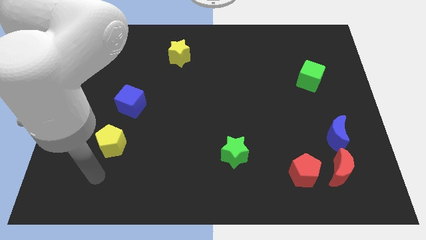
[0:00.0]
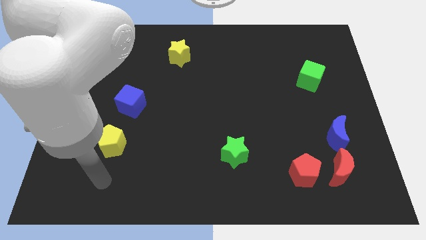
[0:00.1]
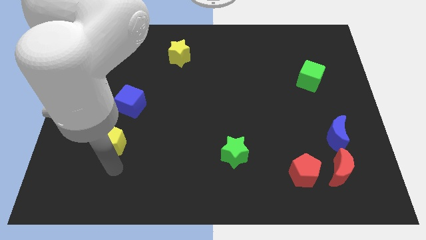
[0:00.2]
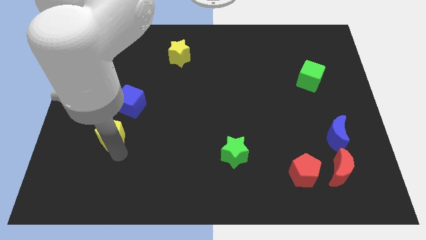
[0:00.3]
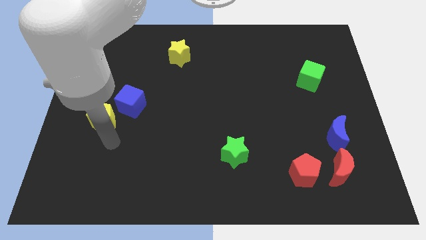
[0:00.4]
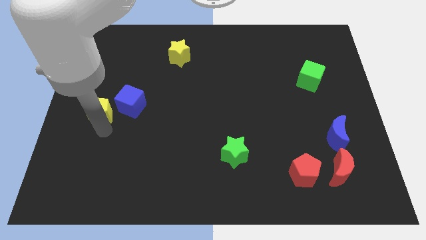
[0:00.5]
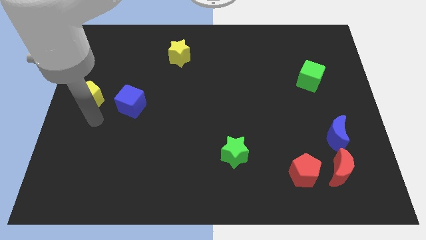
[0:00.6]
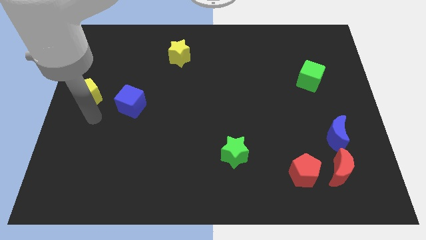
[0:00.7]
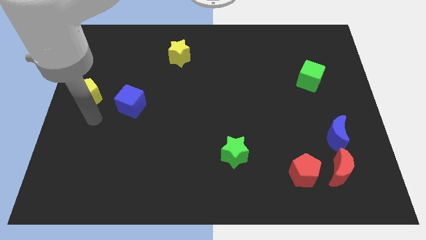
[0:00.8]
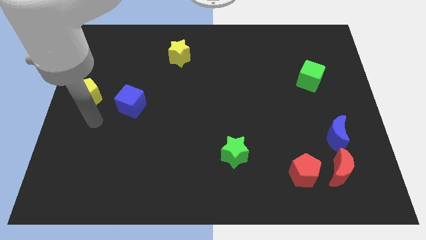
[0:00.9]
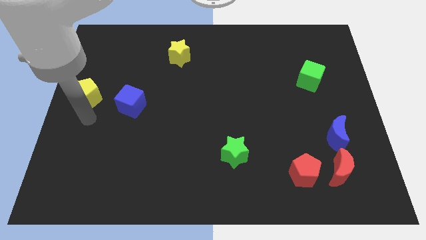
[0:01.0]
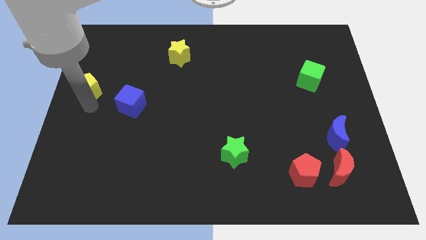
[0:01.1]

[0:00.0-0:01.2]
push the yellow pentagon to the left of blue cube

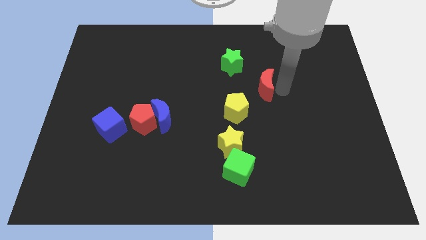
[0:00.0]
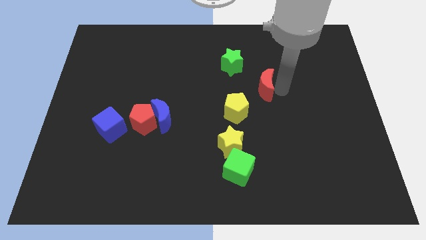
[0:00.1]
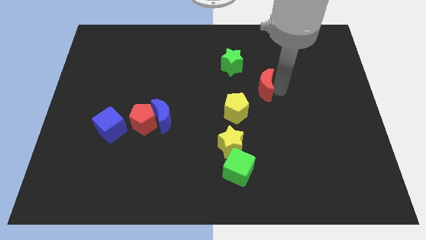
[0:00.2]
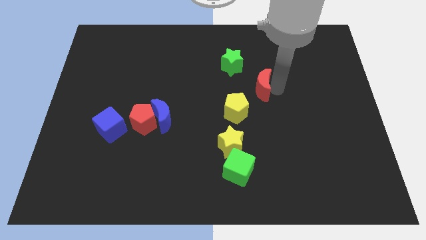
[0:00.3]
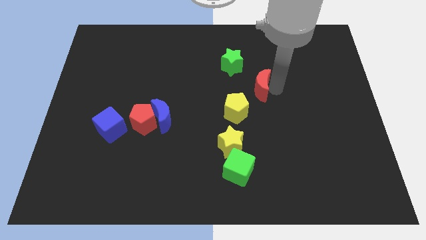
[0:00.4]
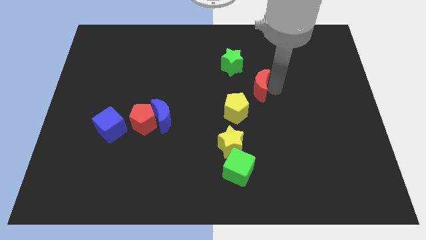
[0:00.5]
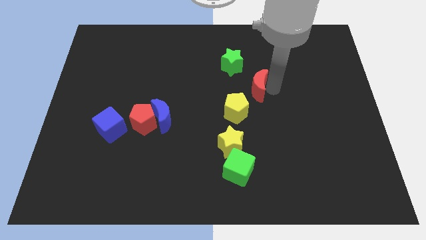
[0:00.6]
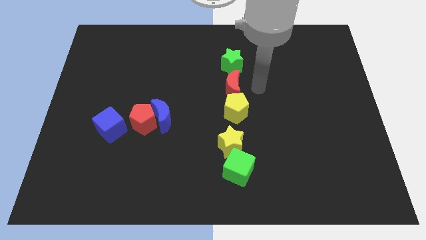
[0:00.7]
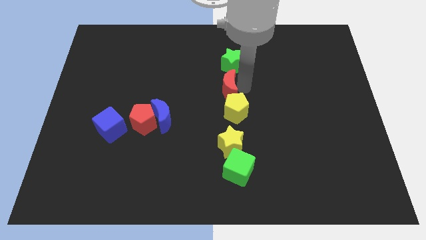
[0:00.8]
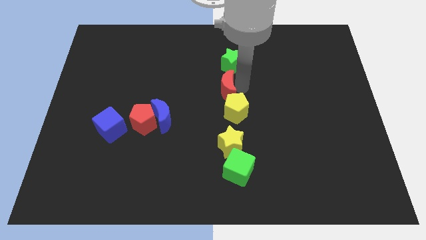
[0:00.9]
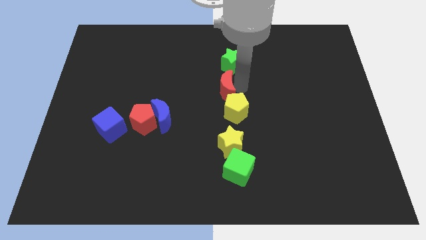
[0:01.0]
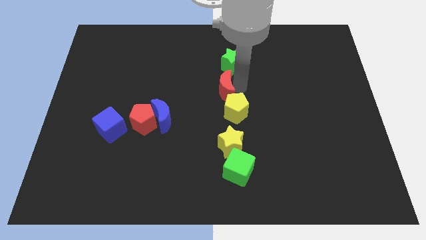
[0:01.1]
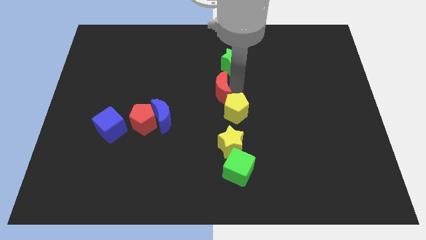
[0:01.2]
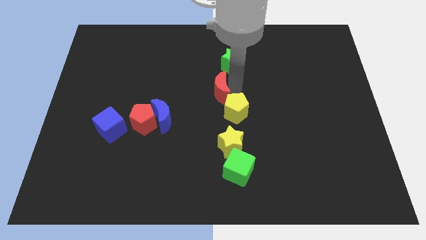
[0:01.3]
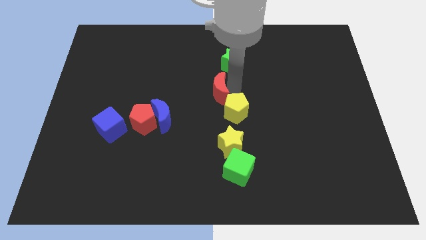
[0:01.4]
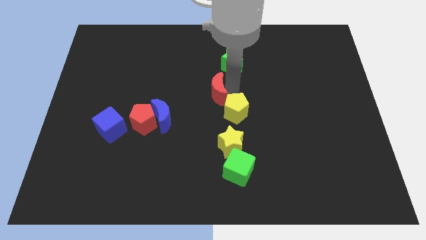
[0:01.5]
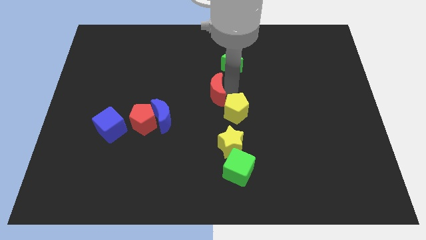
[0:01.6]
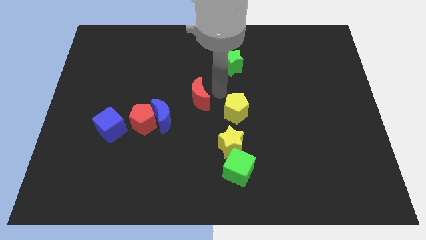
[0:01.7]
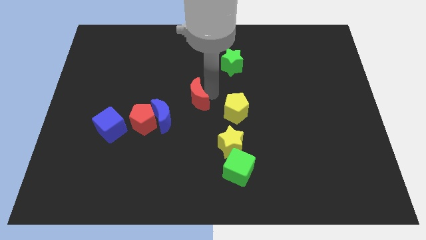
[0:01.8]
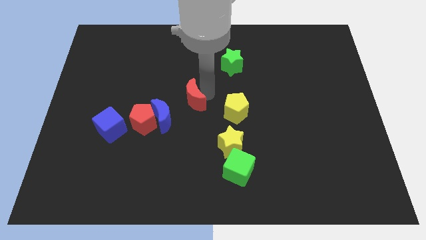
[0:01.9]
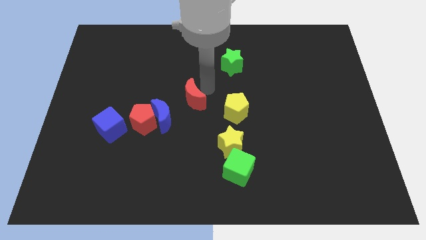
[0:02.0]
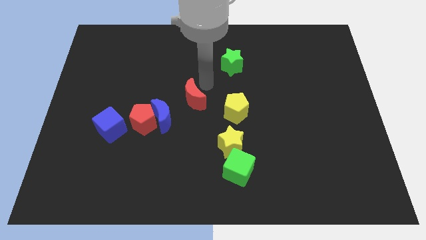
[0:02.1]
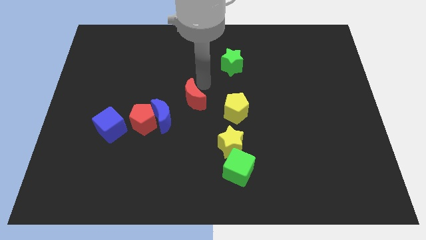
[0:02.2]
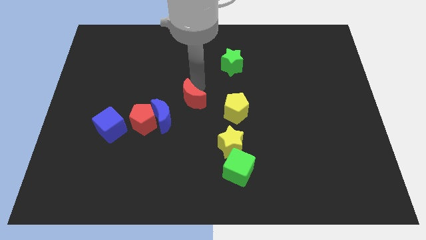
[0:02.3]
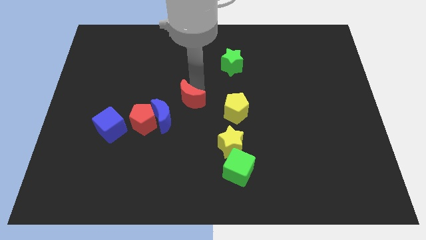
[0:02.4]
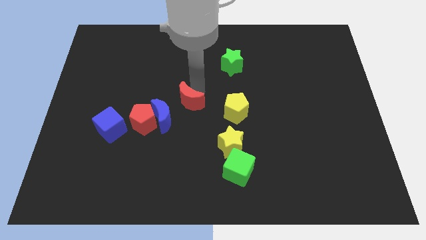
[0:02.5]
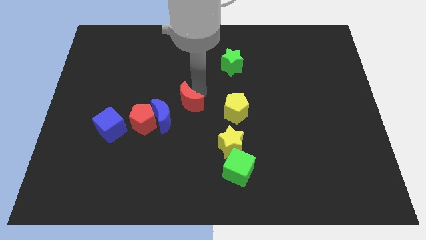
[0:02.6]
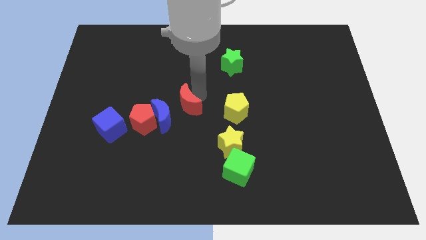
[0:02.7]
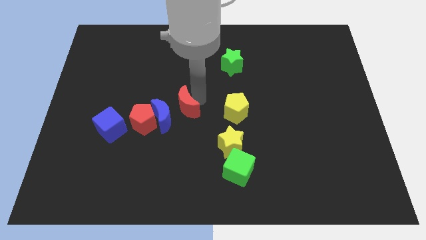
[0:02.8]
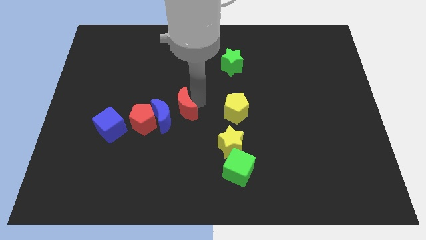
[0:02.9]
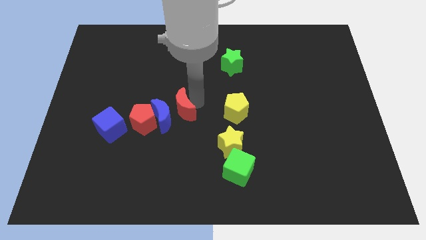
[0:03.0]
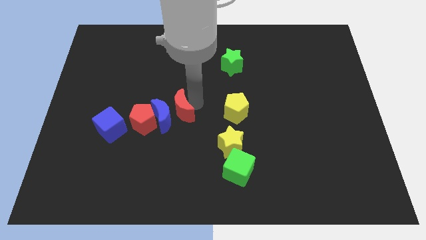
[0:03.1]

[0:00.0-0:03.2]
place the red moon to the top right side of the blue moon

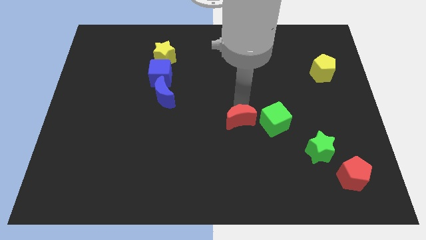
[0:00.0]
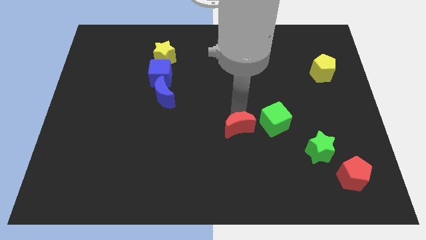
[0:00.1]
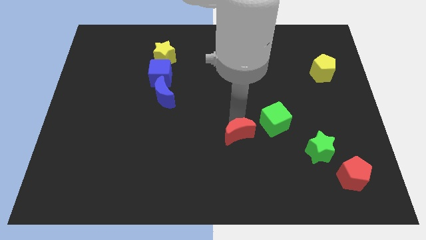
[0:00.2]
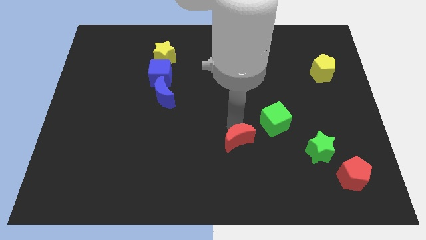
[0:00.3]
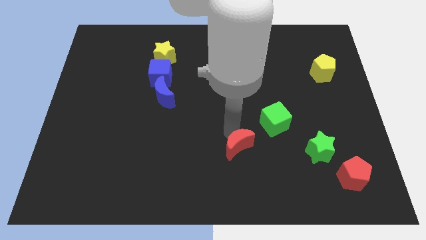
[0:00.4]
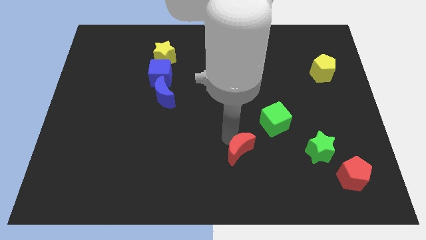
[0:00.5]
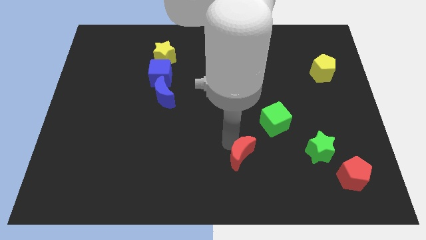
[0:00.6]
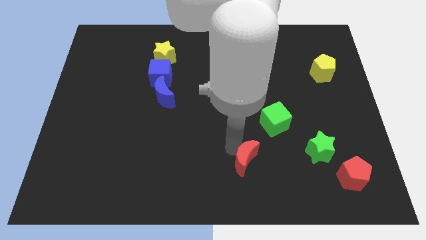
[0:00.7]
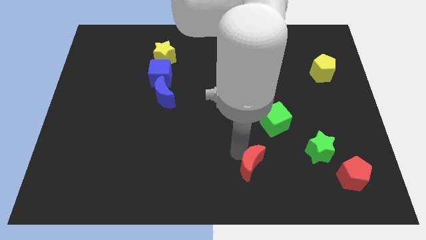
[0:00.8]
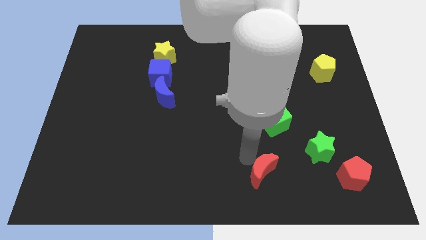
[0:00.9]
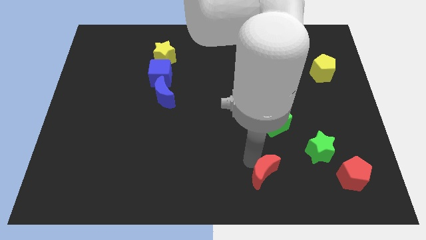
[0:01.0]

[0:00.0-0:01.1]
slide red moon parallel to red pentagon

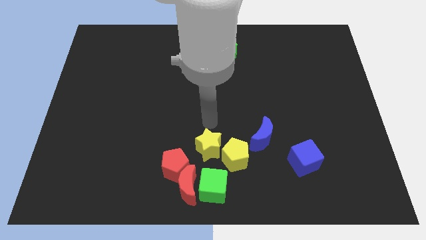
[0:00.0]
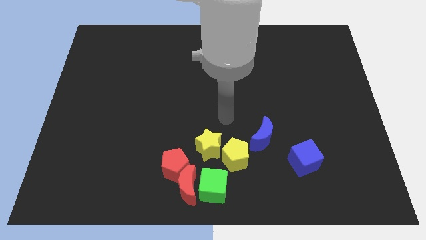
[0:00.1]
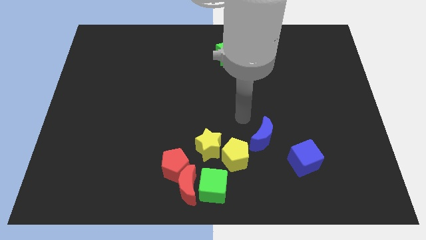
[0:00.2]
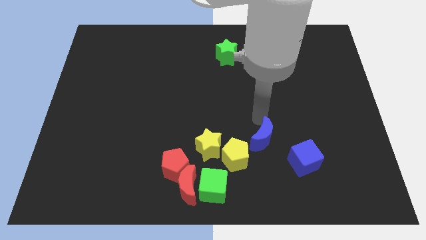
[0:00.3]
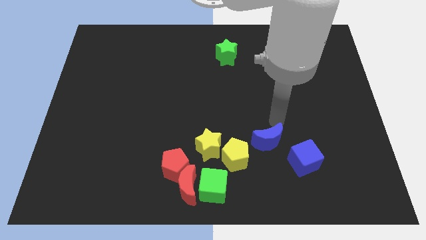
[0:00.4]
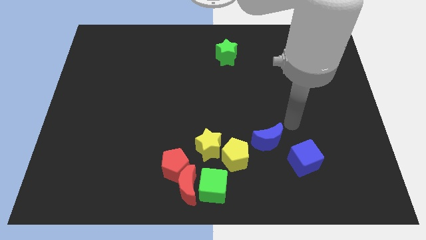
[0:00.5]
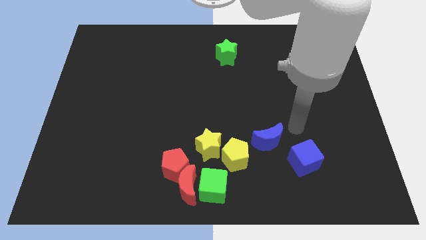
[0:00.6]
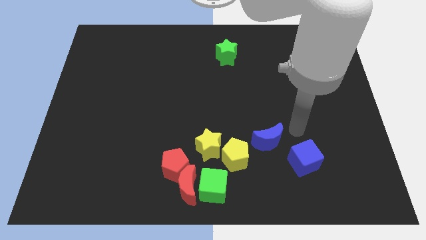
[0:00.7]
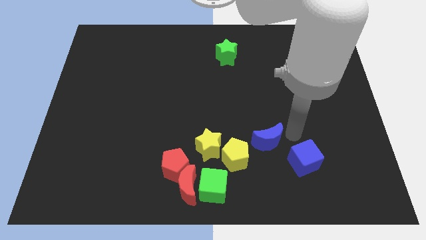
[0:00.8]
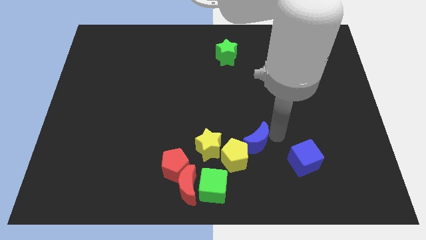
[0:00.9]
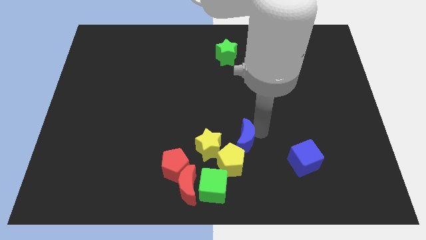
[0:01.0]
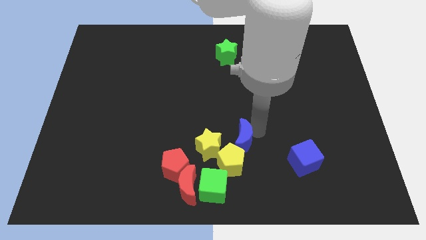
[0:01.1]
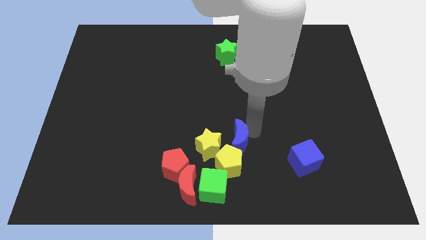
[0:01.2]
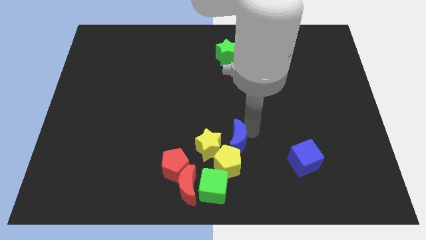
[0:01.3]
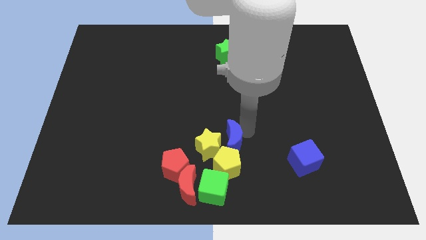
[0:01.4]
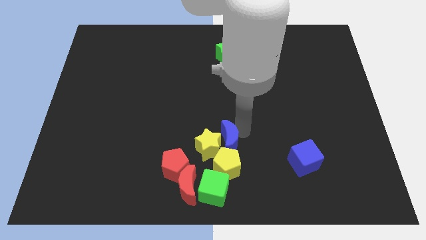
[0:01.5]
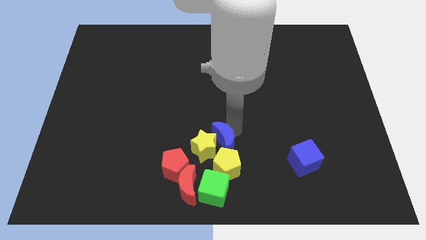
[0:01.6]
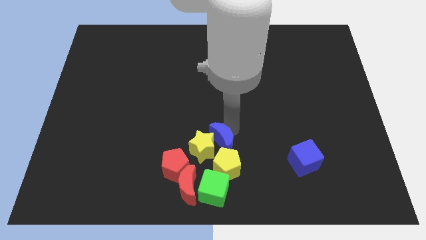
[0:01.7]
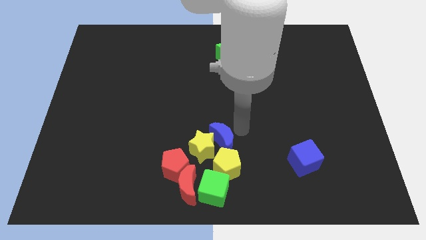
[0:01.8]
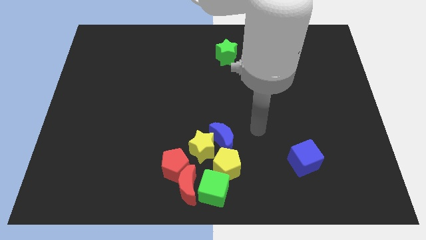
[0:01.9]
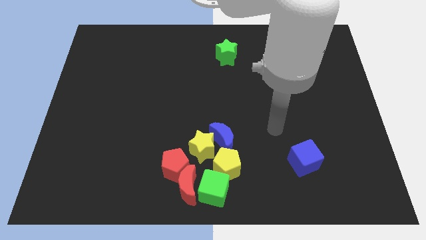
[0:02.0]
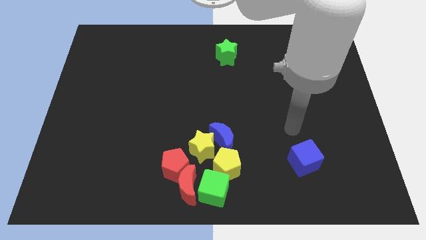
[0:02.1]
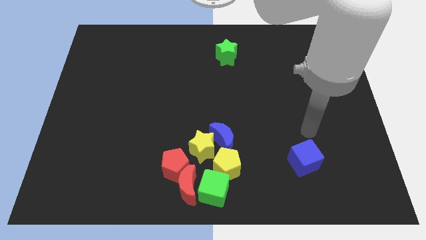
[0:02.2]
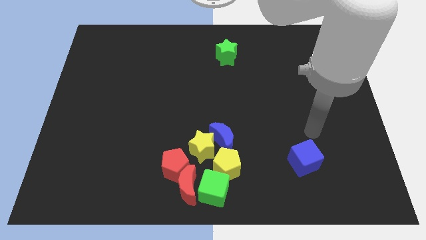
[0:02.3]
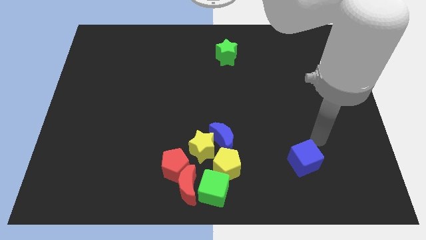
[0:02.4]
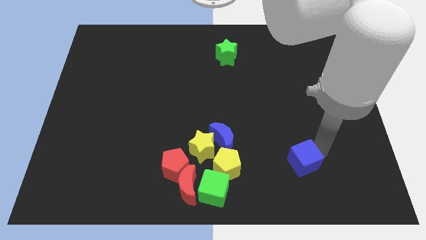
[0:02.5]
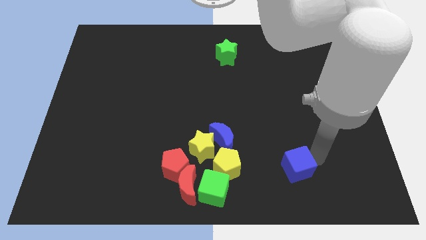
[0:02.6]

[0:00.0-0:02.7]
move blue moon into the yellow star

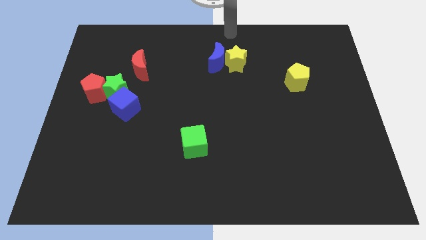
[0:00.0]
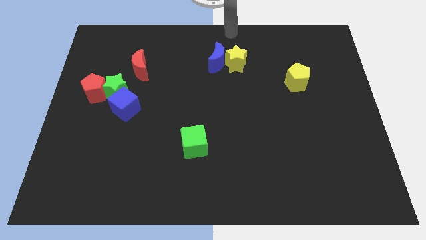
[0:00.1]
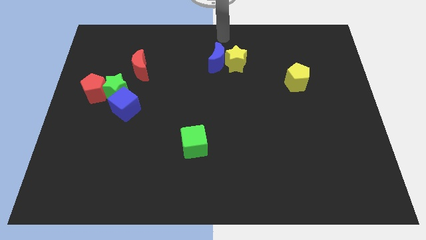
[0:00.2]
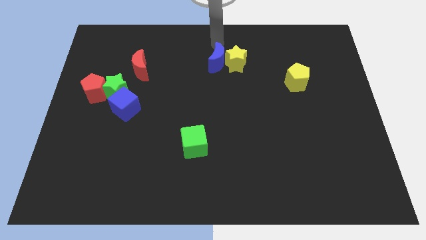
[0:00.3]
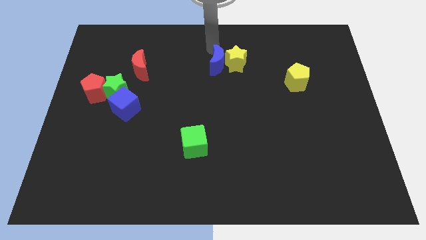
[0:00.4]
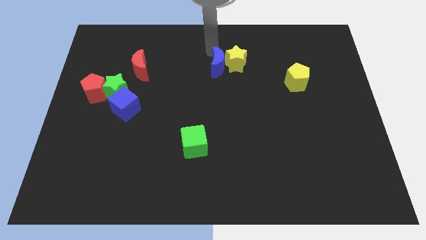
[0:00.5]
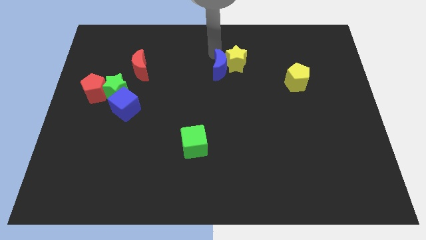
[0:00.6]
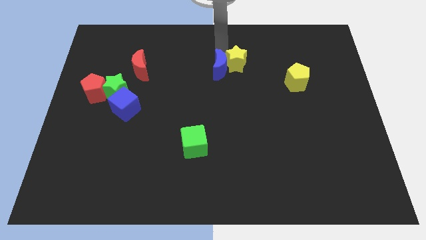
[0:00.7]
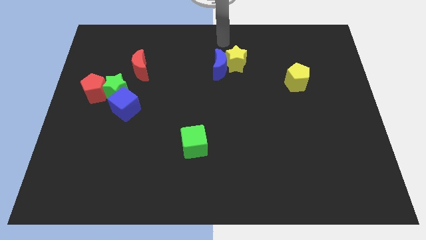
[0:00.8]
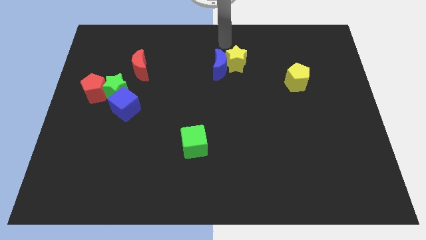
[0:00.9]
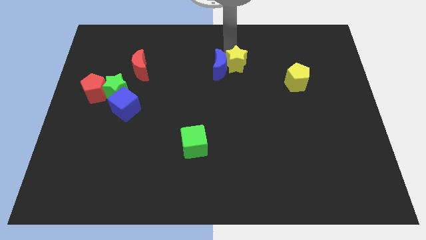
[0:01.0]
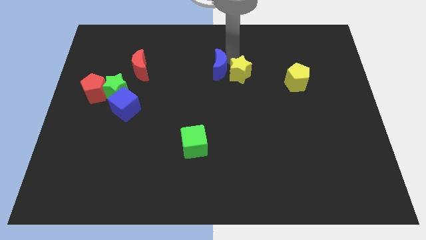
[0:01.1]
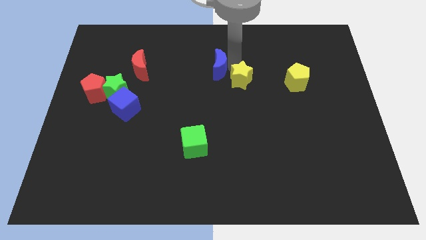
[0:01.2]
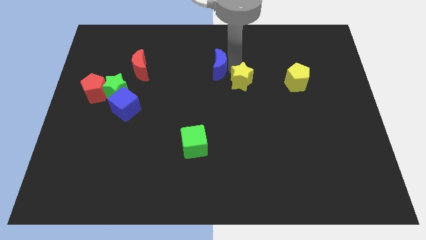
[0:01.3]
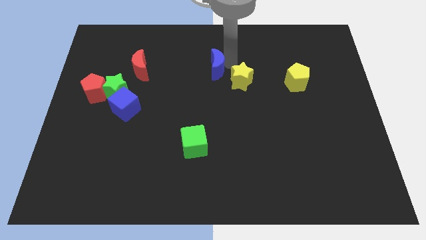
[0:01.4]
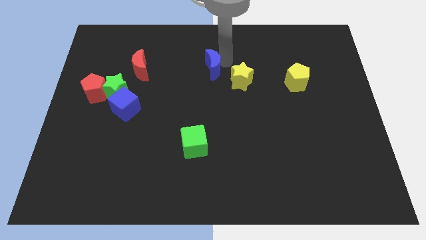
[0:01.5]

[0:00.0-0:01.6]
push yellow star slight towards down
